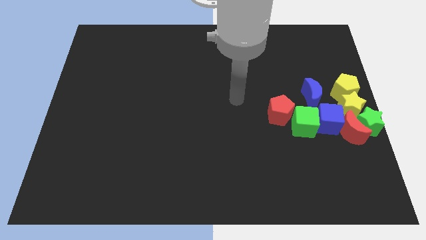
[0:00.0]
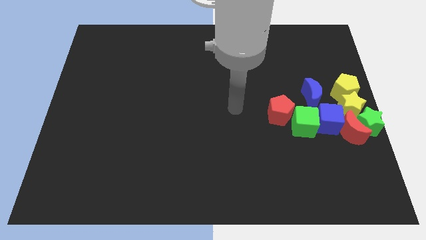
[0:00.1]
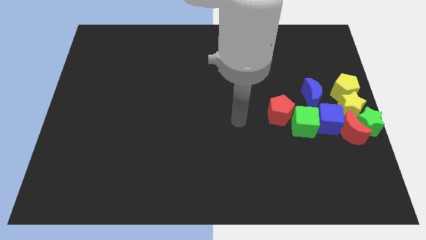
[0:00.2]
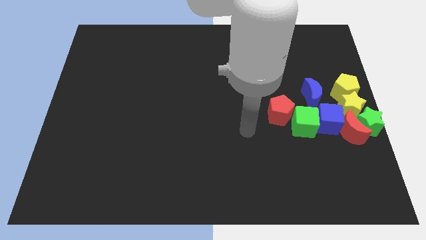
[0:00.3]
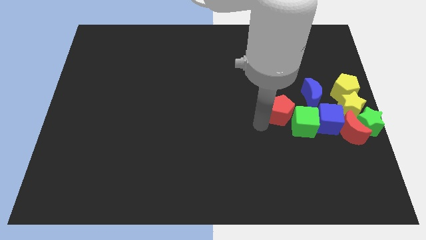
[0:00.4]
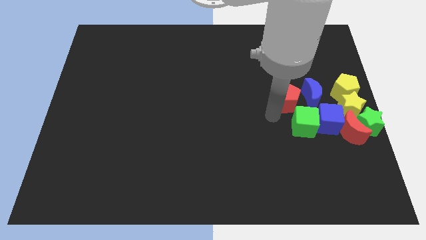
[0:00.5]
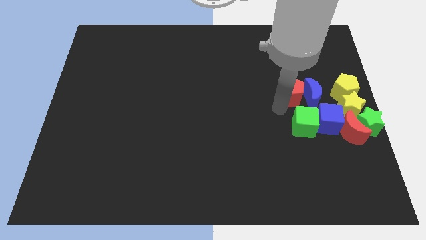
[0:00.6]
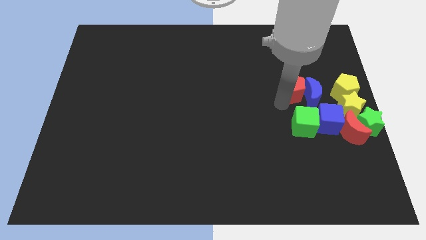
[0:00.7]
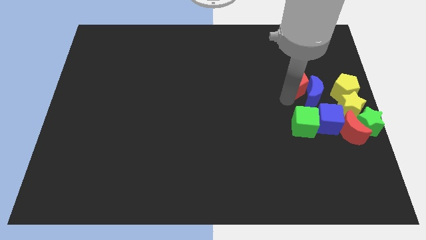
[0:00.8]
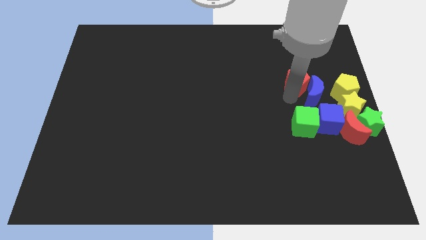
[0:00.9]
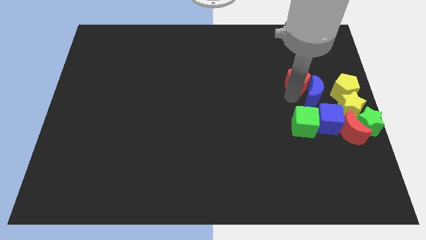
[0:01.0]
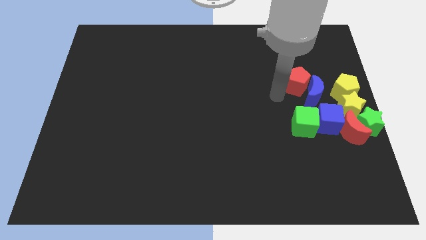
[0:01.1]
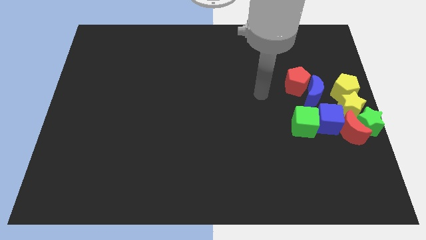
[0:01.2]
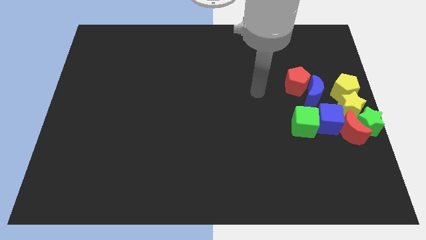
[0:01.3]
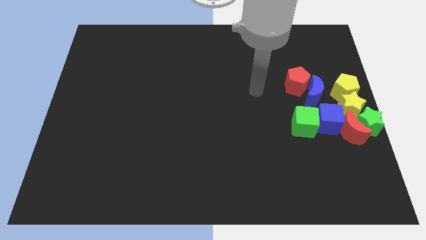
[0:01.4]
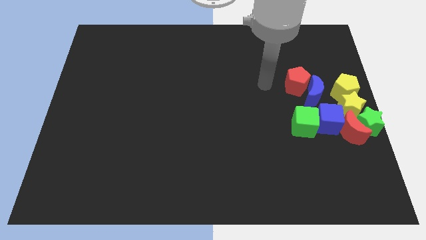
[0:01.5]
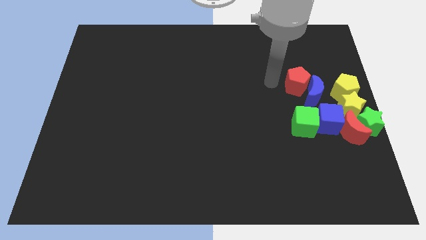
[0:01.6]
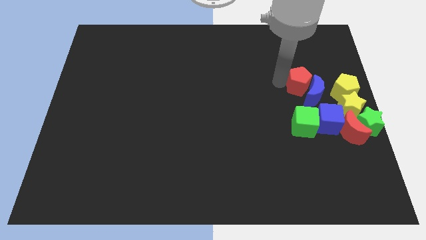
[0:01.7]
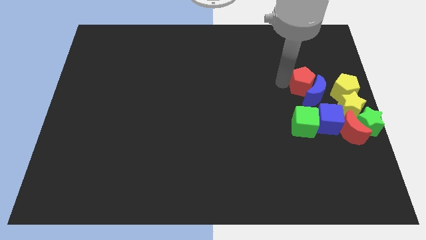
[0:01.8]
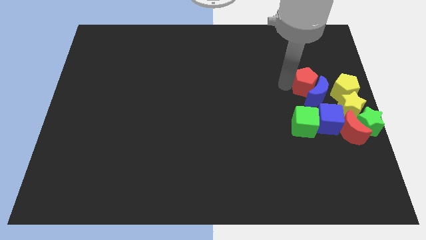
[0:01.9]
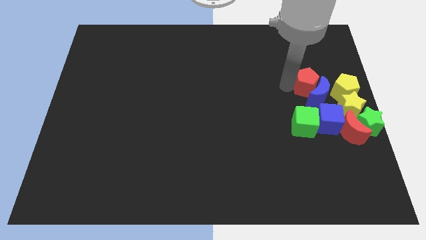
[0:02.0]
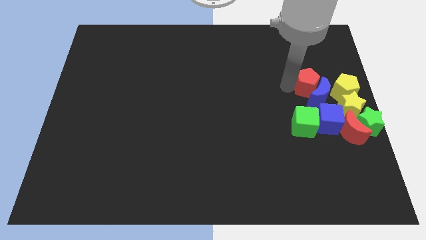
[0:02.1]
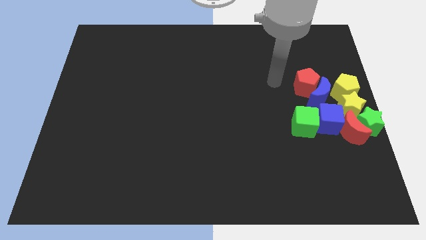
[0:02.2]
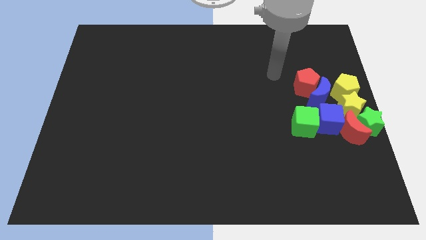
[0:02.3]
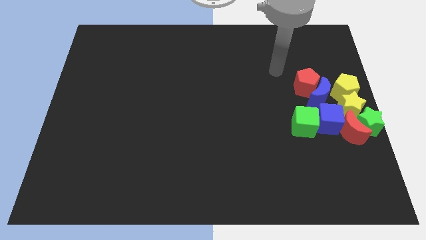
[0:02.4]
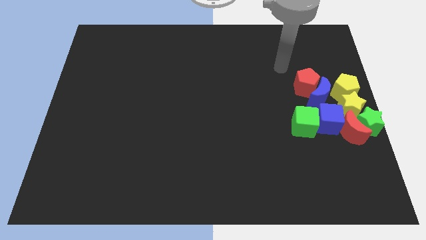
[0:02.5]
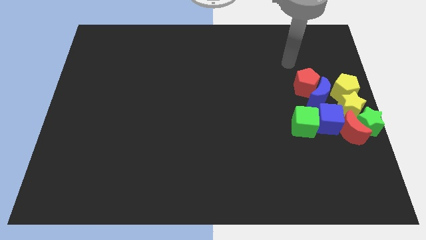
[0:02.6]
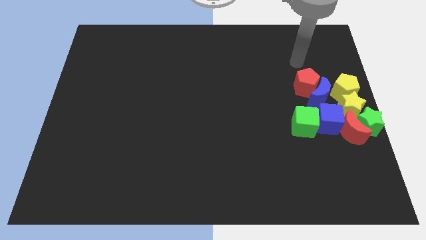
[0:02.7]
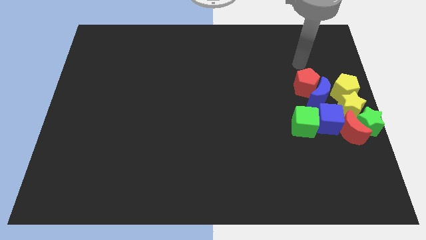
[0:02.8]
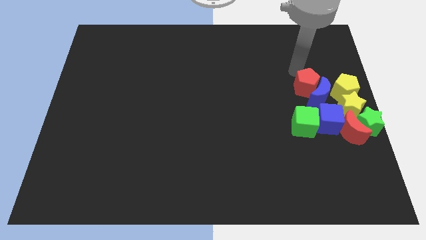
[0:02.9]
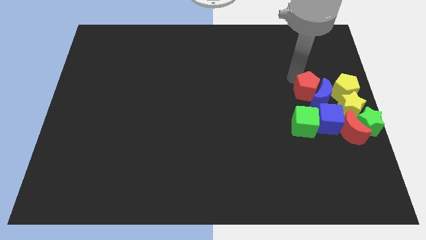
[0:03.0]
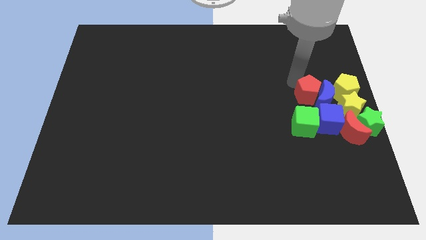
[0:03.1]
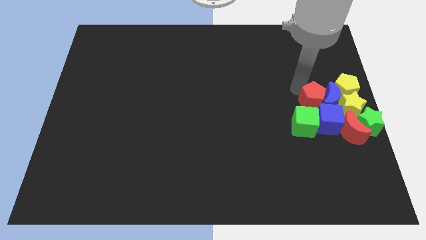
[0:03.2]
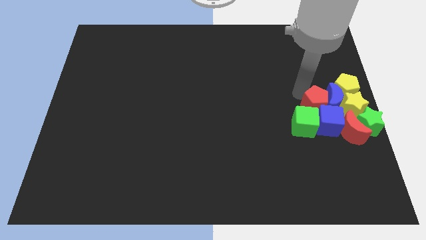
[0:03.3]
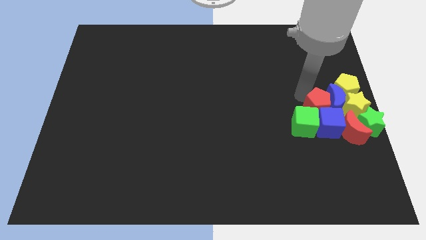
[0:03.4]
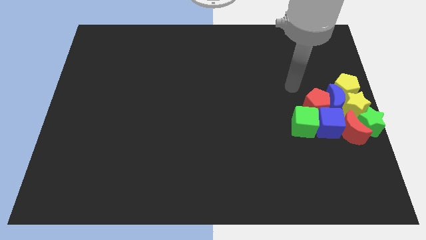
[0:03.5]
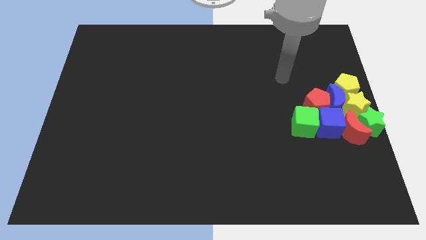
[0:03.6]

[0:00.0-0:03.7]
move red pentagon above the two cubes

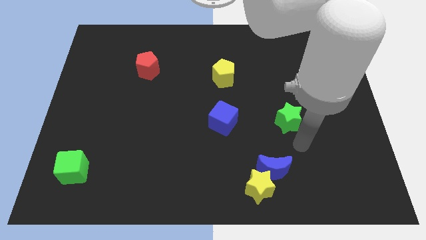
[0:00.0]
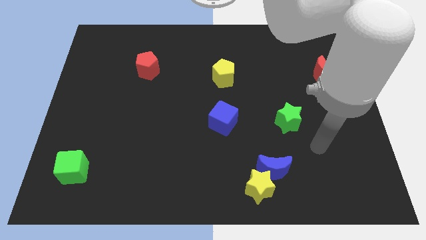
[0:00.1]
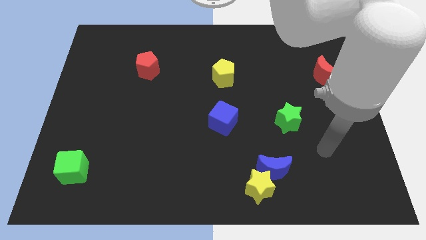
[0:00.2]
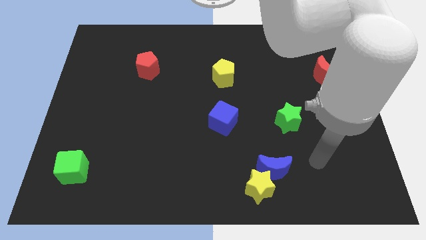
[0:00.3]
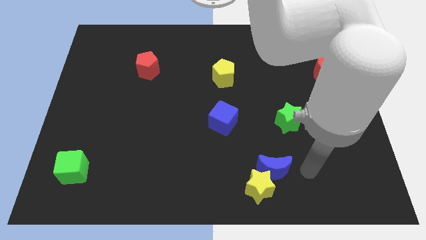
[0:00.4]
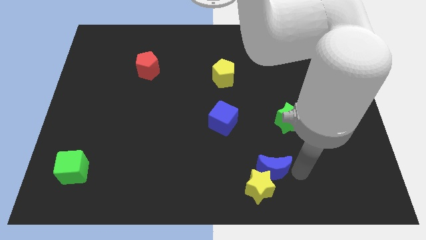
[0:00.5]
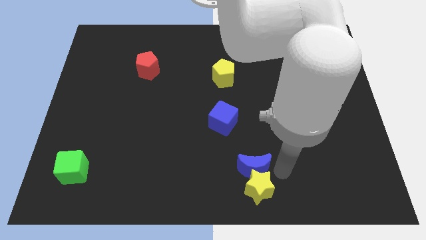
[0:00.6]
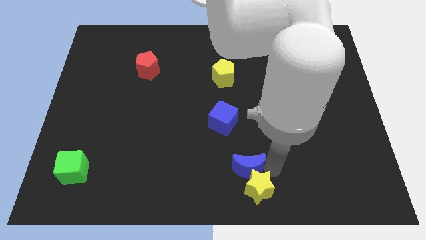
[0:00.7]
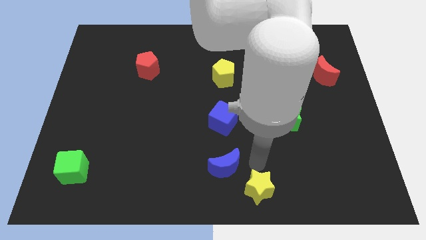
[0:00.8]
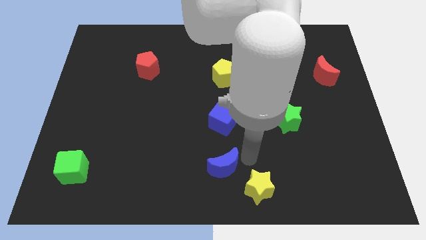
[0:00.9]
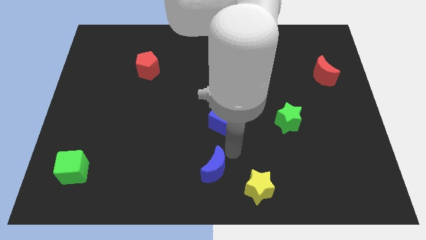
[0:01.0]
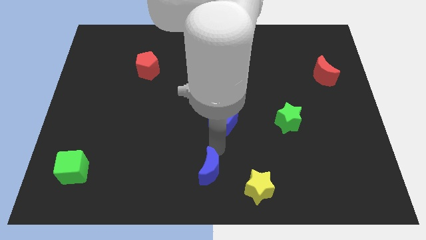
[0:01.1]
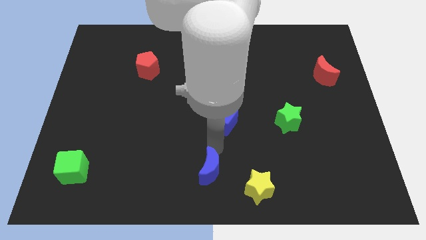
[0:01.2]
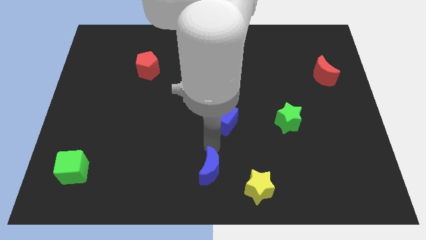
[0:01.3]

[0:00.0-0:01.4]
push the blue crescent to the bottom of the blue cube

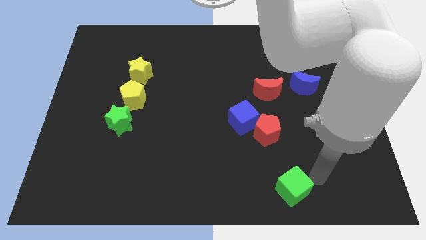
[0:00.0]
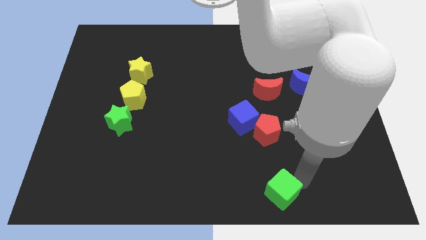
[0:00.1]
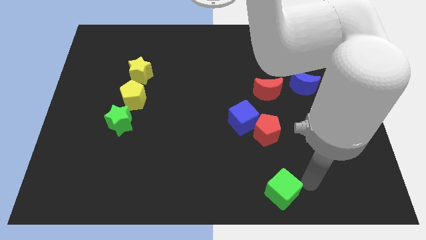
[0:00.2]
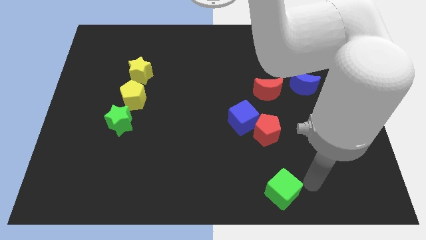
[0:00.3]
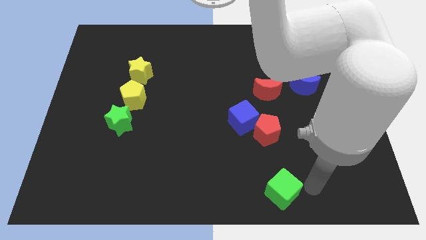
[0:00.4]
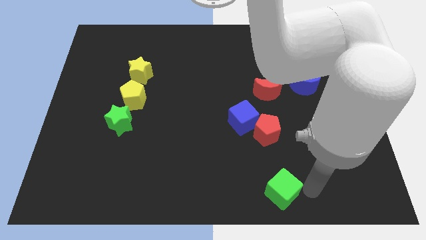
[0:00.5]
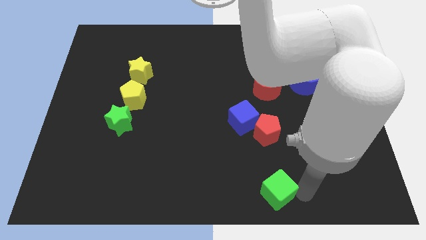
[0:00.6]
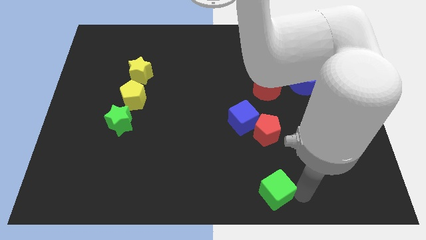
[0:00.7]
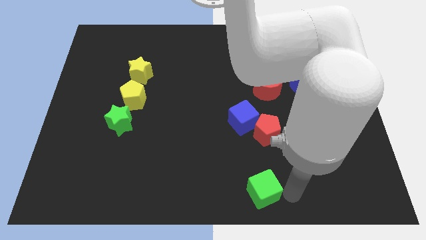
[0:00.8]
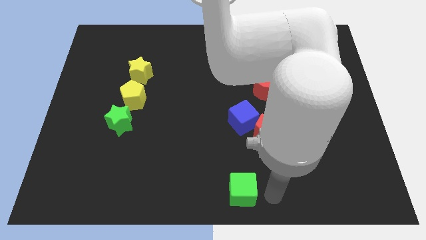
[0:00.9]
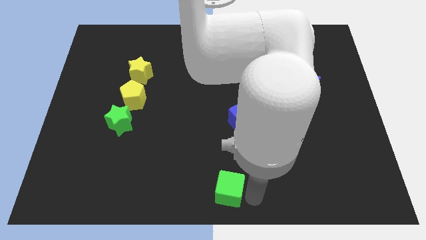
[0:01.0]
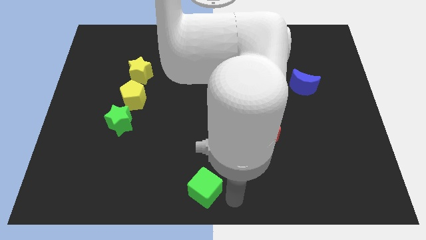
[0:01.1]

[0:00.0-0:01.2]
place the green cube at the bottom center of the board

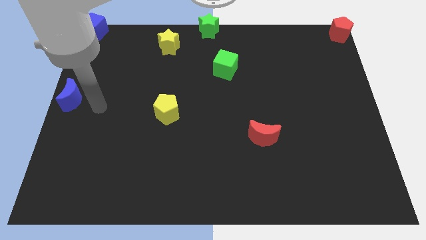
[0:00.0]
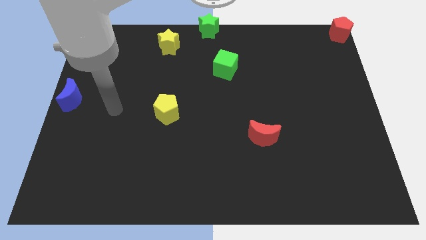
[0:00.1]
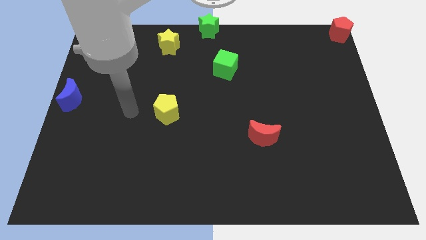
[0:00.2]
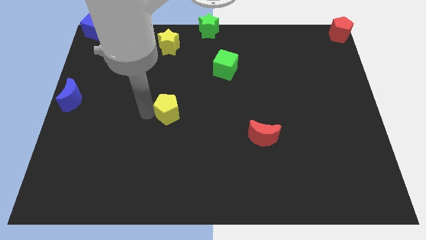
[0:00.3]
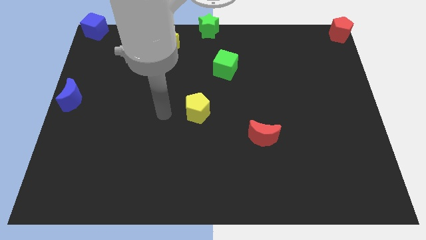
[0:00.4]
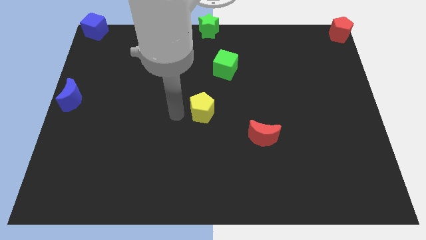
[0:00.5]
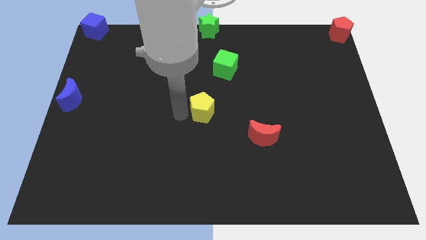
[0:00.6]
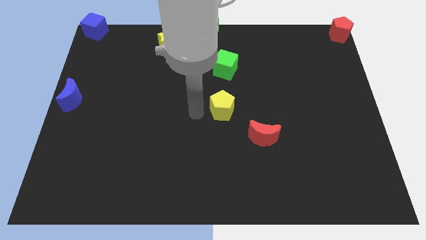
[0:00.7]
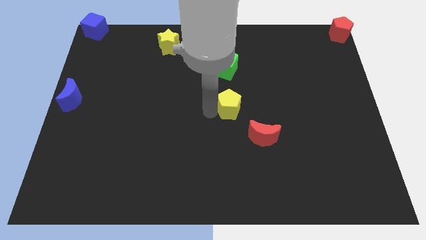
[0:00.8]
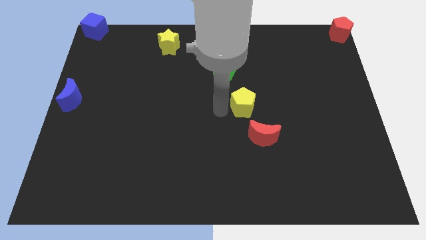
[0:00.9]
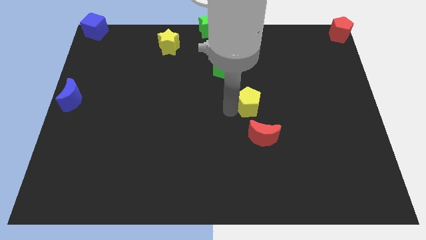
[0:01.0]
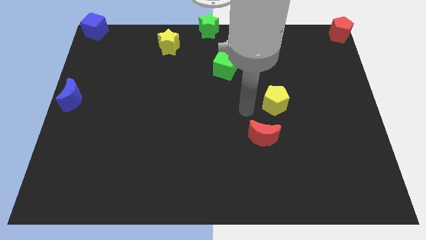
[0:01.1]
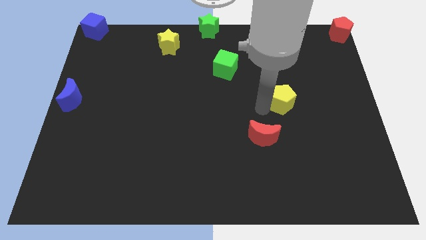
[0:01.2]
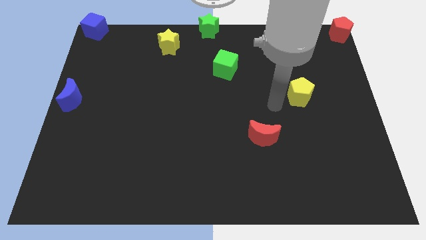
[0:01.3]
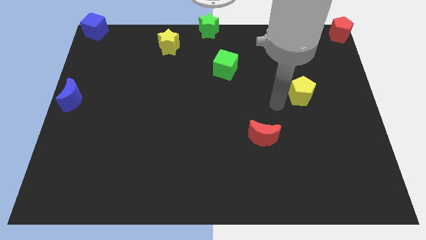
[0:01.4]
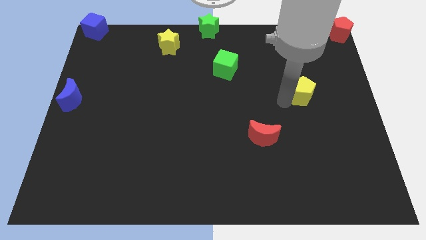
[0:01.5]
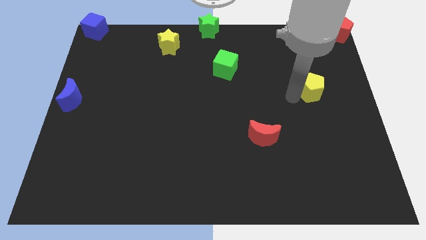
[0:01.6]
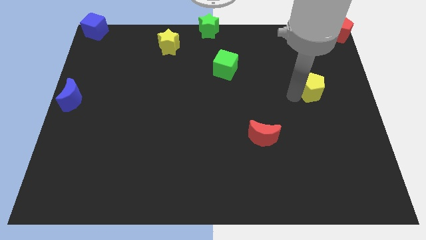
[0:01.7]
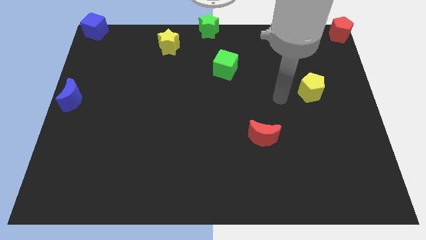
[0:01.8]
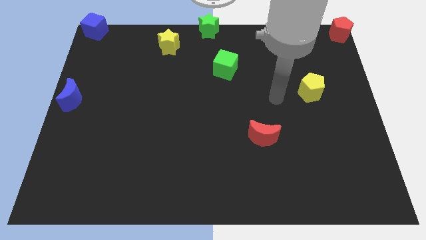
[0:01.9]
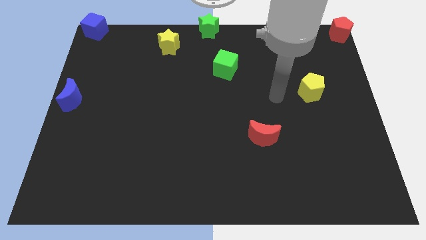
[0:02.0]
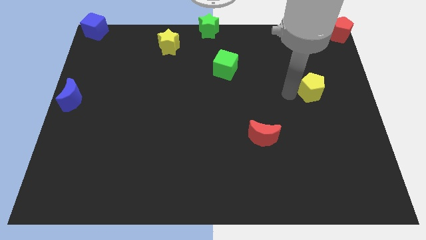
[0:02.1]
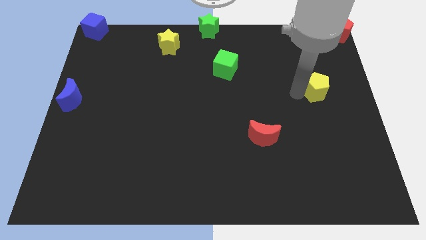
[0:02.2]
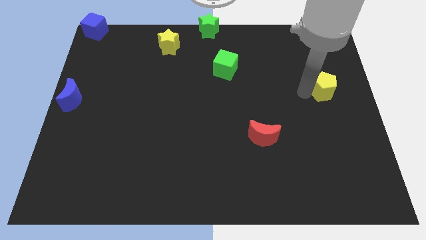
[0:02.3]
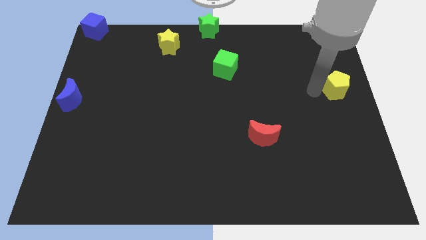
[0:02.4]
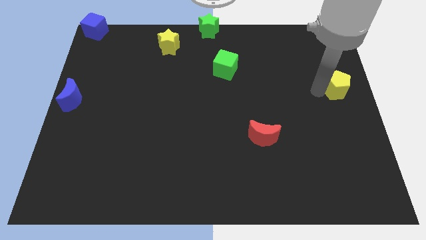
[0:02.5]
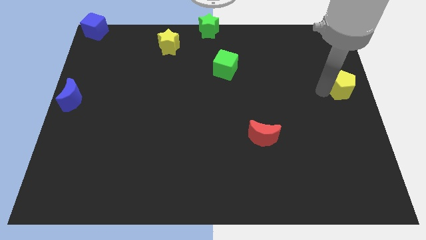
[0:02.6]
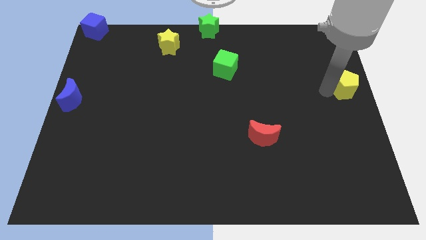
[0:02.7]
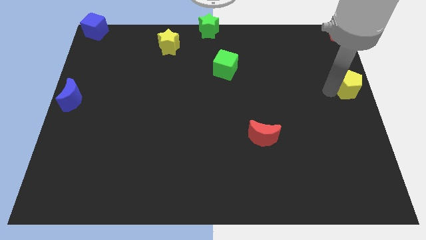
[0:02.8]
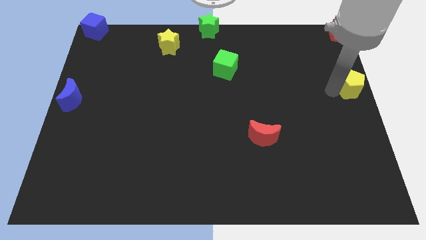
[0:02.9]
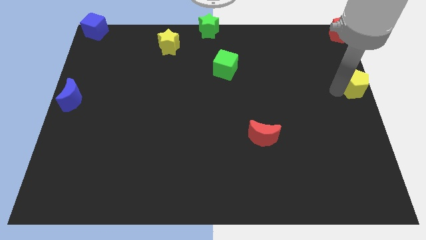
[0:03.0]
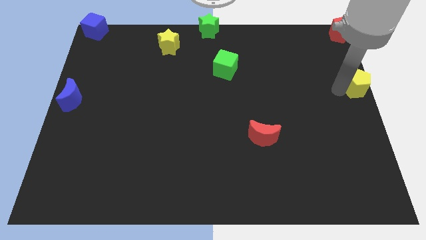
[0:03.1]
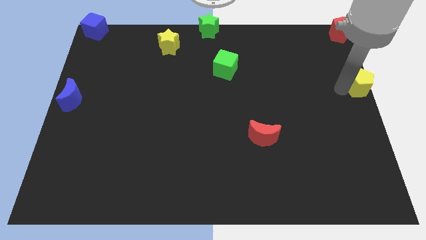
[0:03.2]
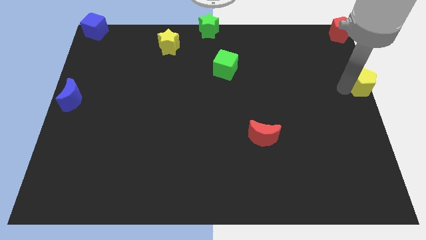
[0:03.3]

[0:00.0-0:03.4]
place the yellow pentagon to the center right of the board
